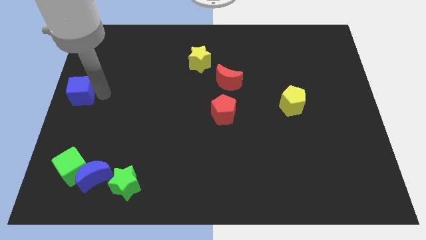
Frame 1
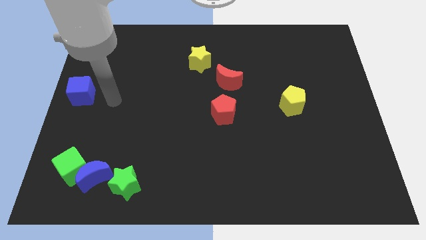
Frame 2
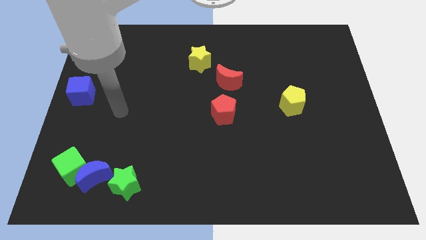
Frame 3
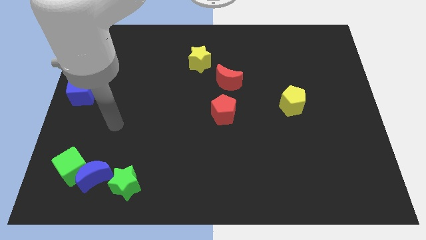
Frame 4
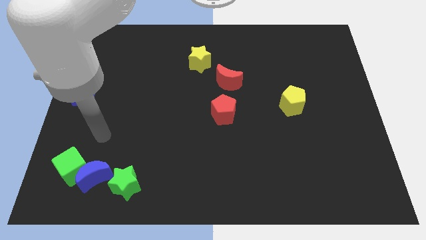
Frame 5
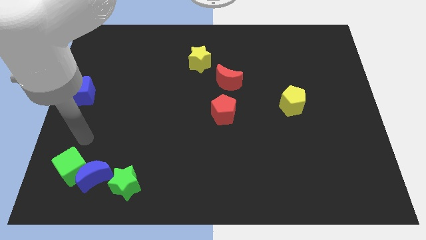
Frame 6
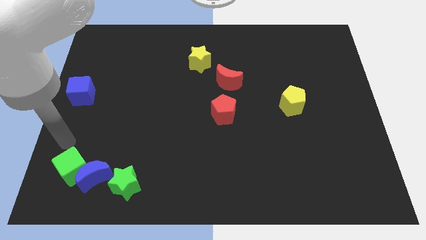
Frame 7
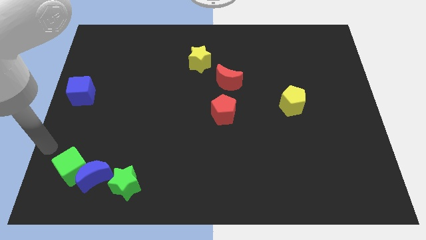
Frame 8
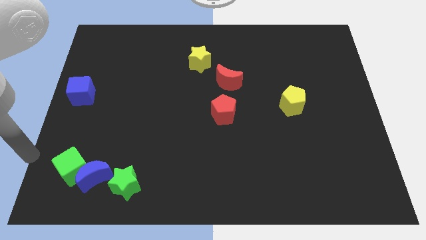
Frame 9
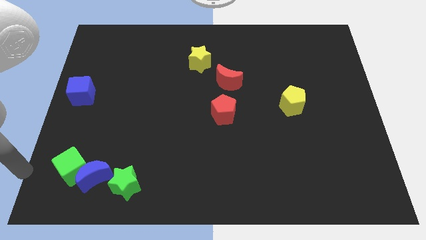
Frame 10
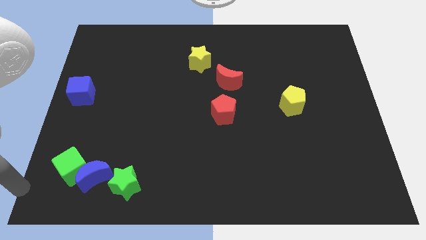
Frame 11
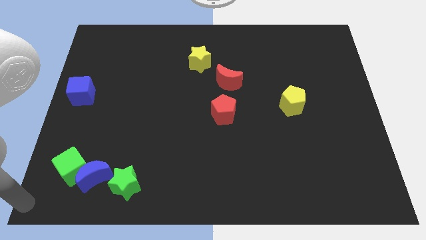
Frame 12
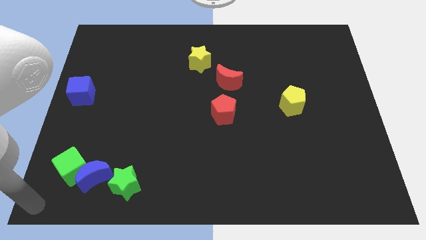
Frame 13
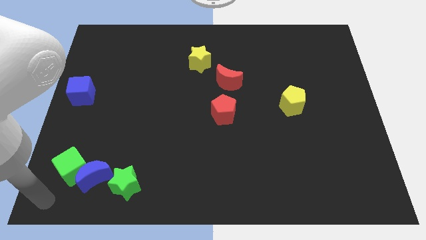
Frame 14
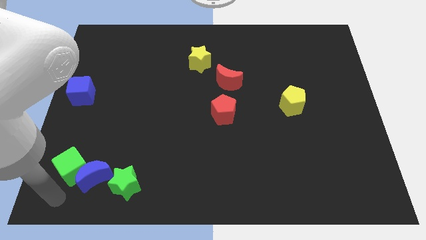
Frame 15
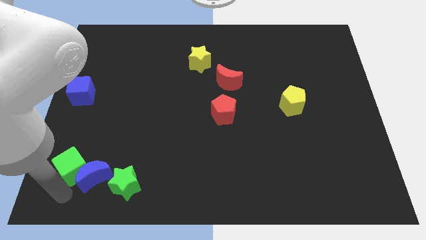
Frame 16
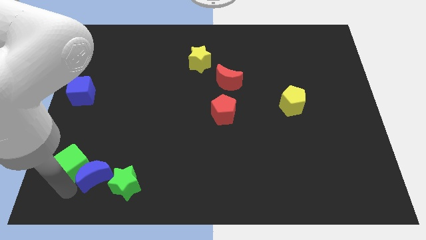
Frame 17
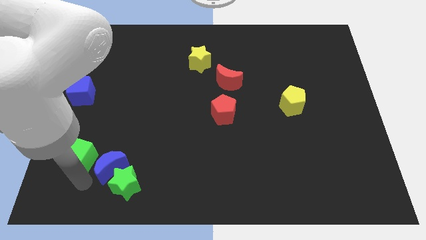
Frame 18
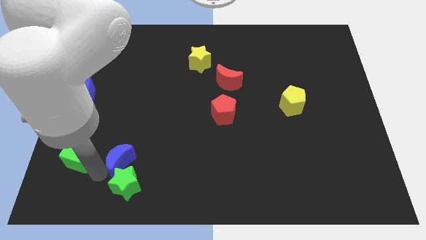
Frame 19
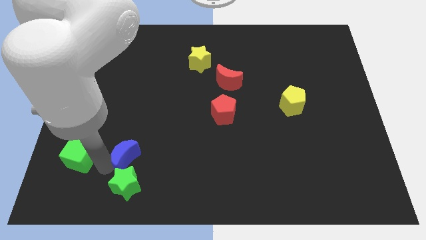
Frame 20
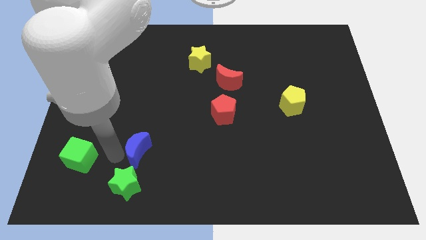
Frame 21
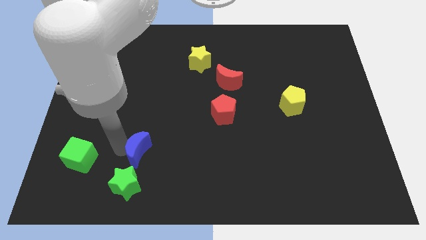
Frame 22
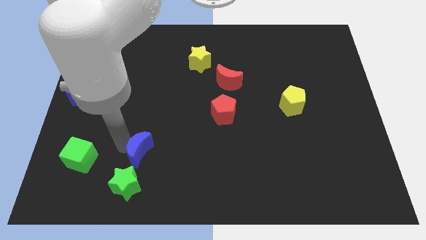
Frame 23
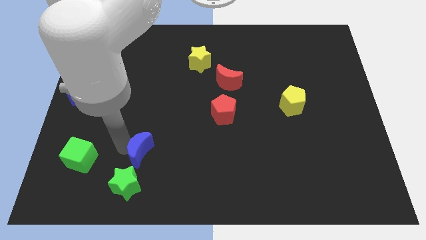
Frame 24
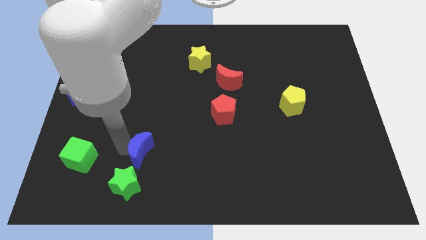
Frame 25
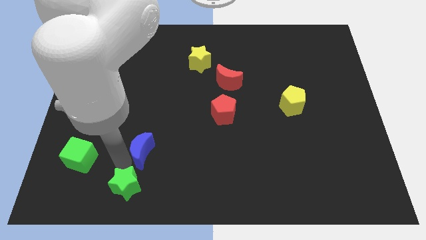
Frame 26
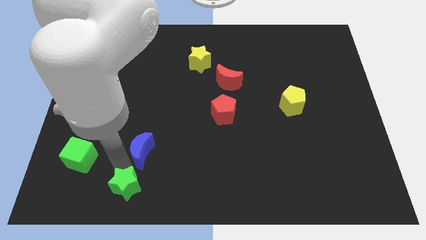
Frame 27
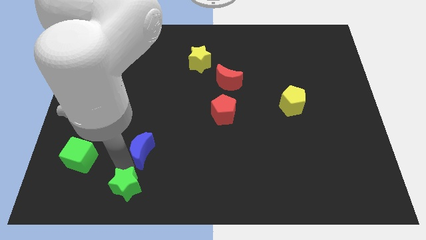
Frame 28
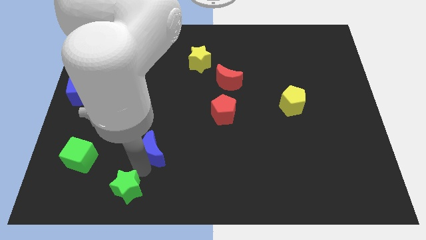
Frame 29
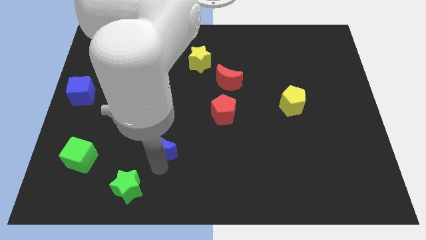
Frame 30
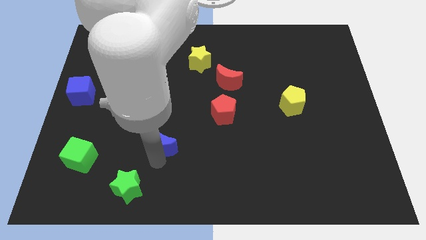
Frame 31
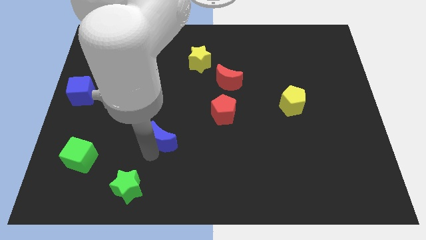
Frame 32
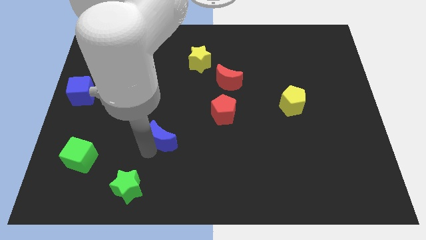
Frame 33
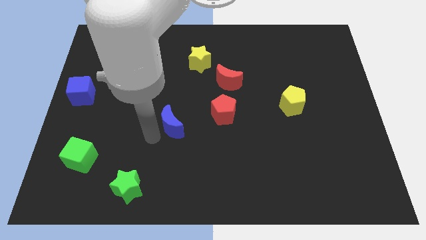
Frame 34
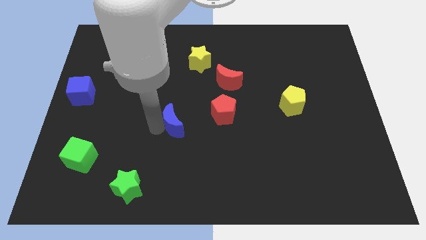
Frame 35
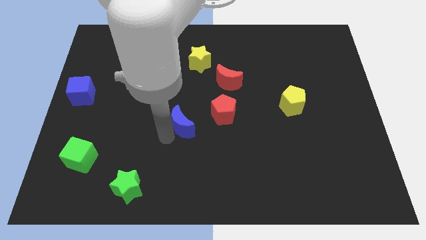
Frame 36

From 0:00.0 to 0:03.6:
place the blue moon diagonally to red moon

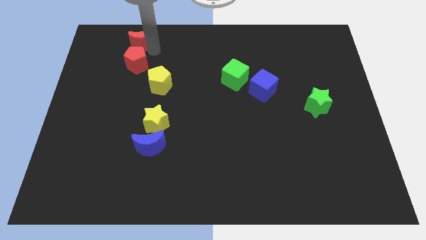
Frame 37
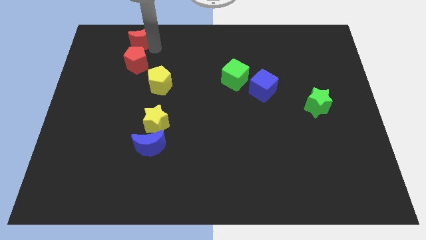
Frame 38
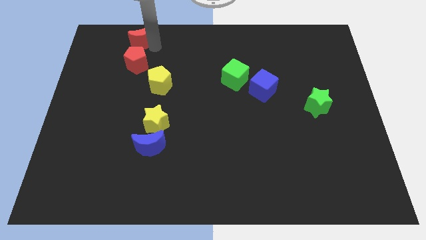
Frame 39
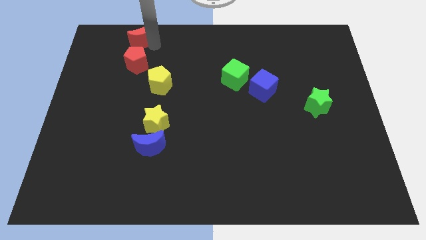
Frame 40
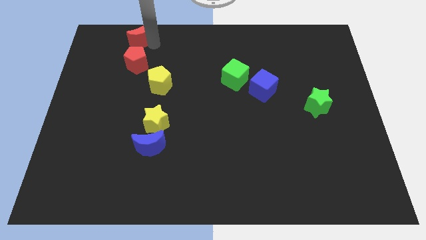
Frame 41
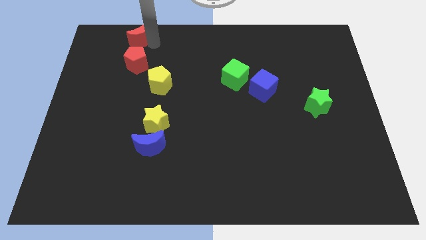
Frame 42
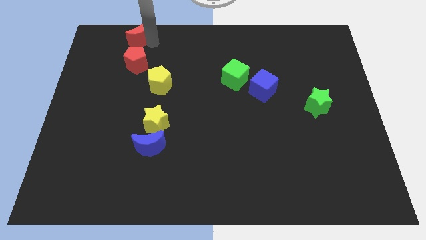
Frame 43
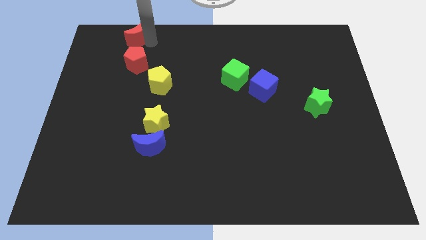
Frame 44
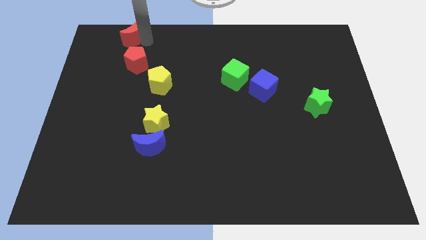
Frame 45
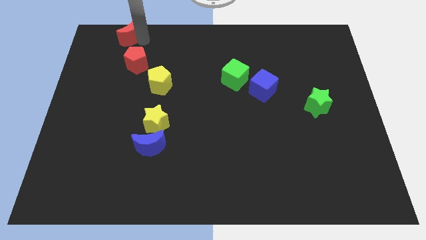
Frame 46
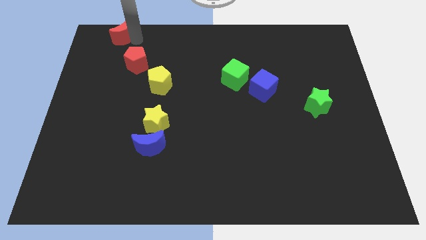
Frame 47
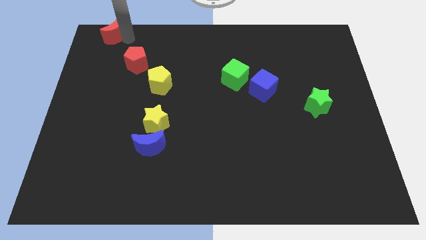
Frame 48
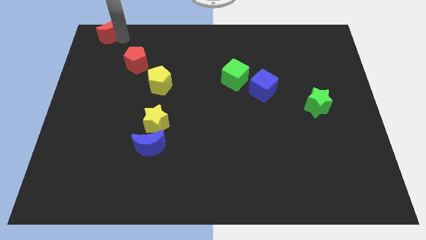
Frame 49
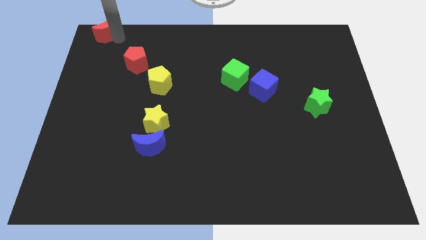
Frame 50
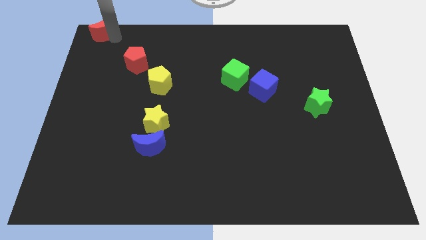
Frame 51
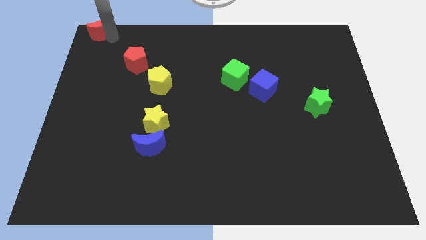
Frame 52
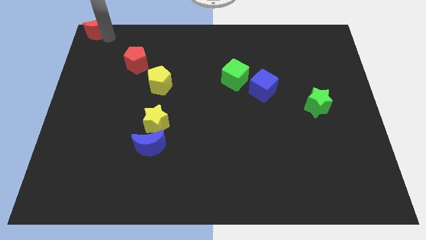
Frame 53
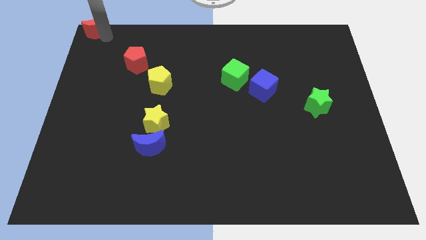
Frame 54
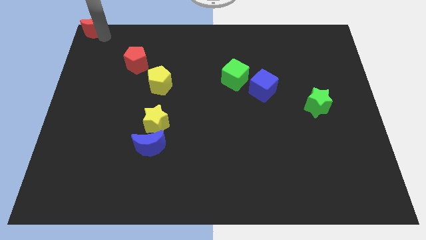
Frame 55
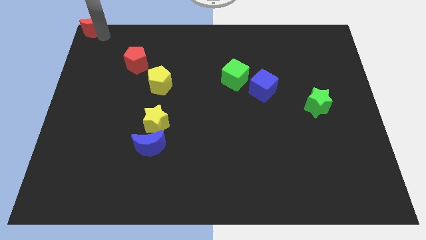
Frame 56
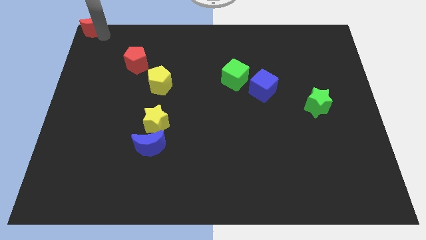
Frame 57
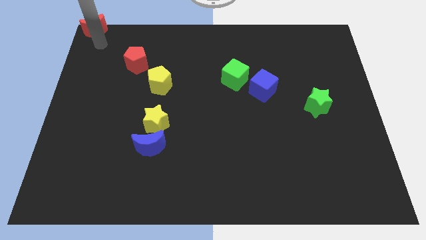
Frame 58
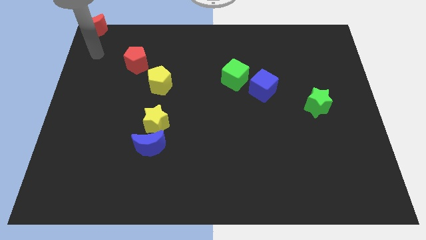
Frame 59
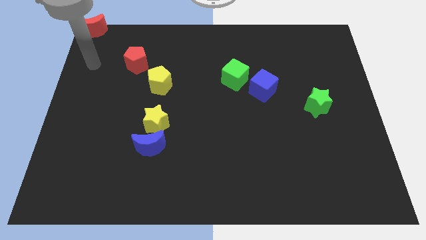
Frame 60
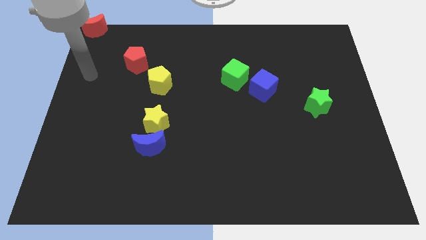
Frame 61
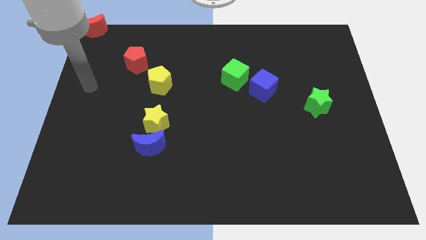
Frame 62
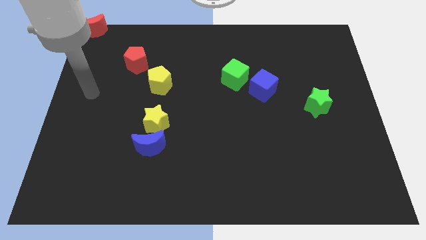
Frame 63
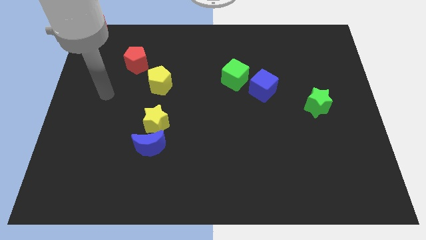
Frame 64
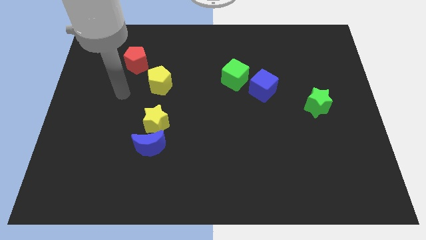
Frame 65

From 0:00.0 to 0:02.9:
push red moon towards top left

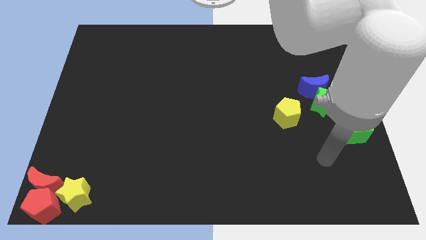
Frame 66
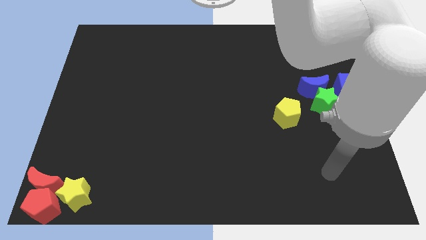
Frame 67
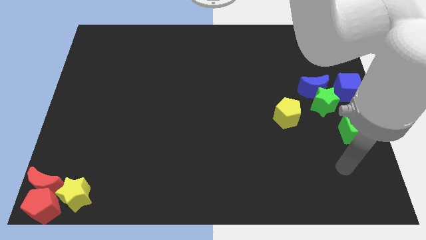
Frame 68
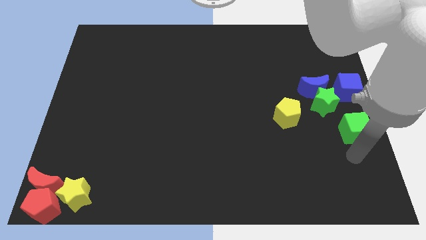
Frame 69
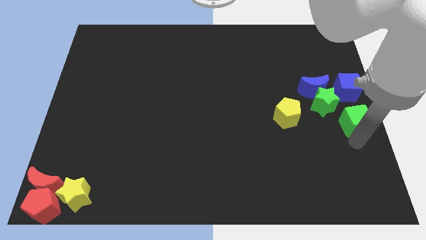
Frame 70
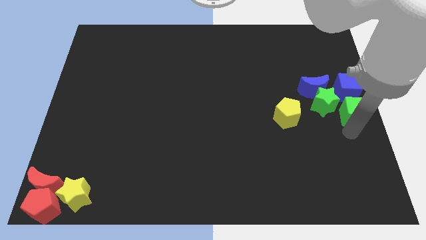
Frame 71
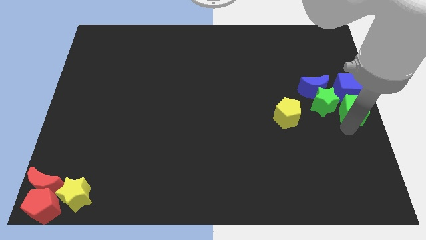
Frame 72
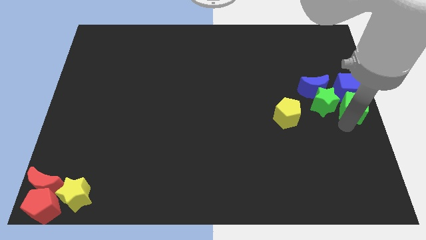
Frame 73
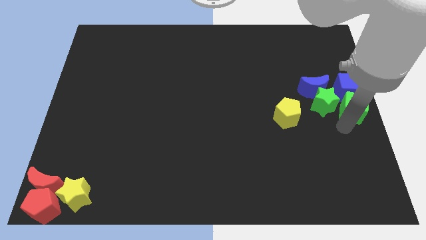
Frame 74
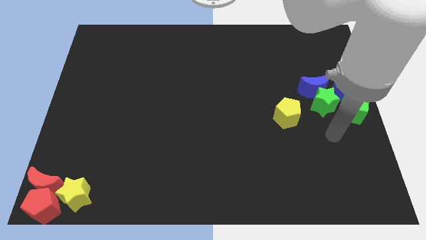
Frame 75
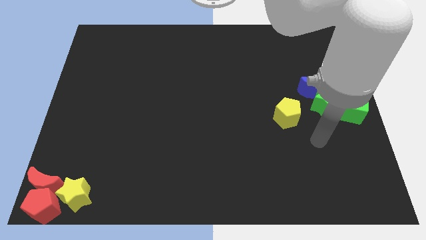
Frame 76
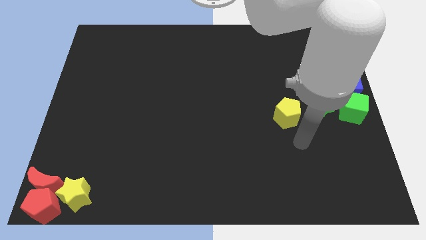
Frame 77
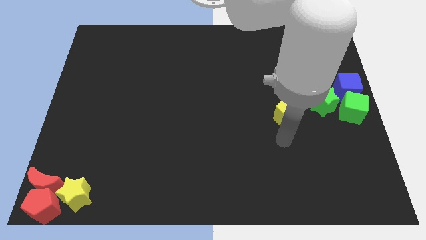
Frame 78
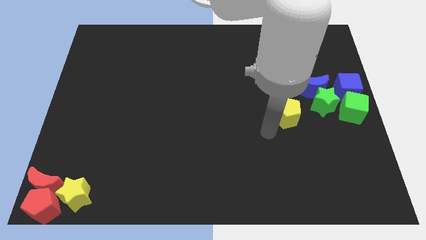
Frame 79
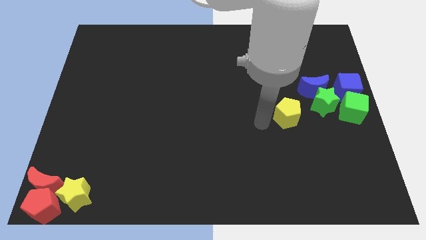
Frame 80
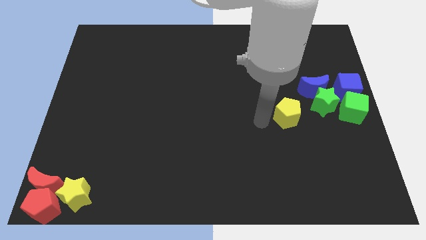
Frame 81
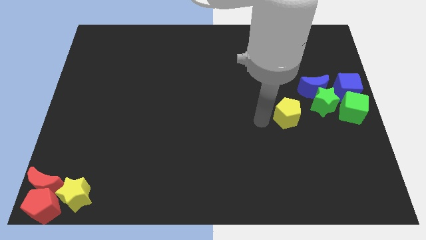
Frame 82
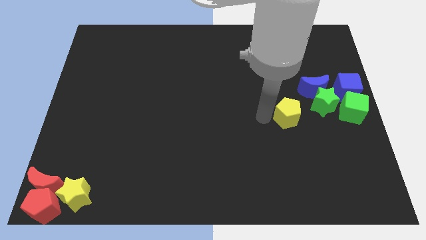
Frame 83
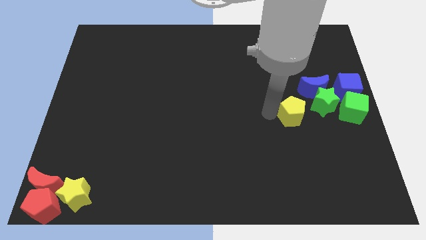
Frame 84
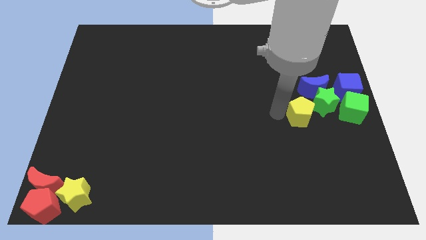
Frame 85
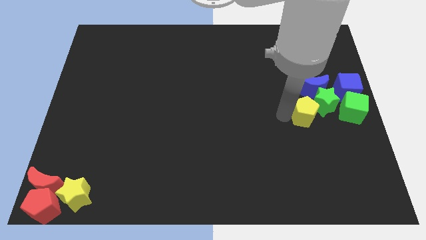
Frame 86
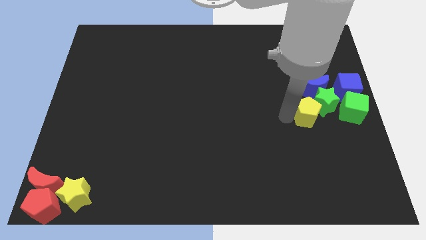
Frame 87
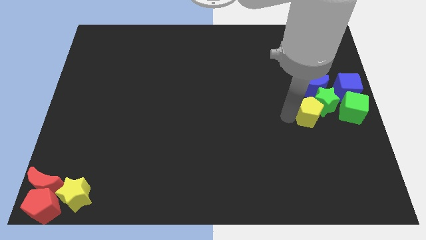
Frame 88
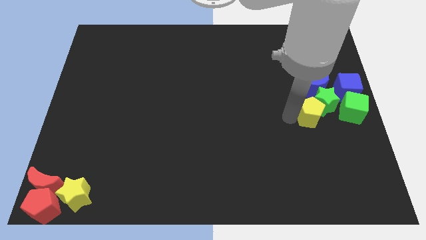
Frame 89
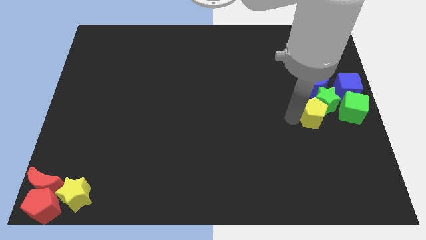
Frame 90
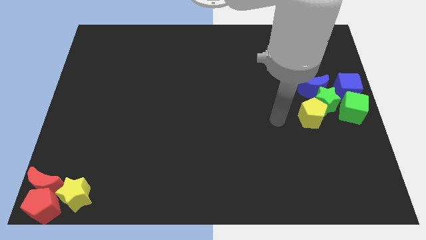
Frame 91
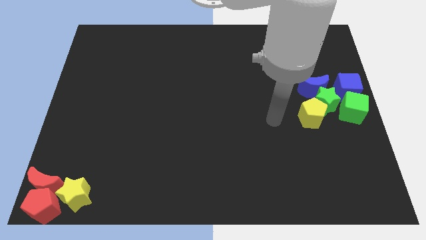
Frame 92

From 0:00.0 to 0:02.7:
push yellow pentagon near green star
